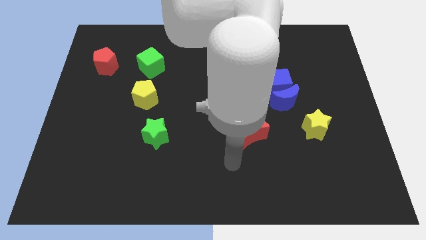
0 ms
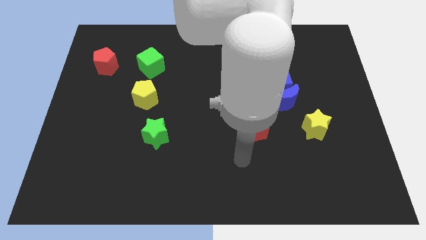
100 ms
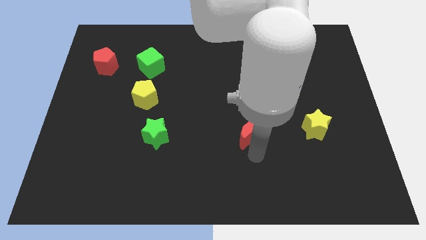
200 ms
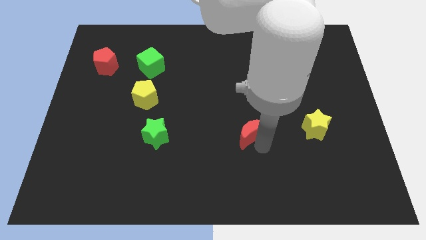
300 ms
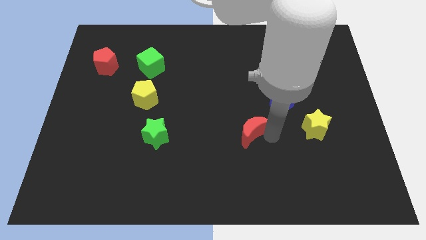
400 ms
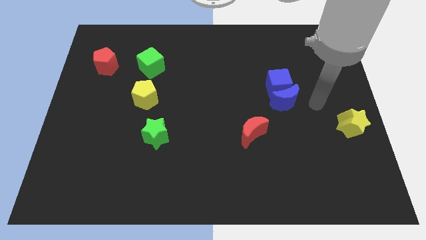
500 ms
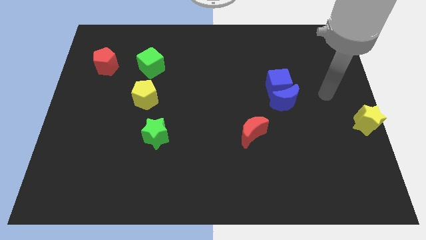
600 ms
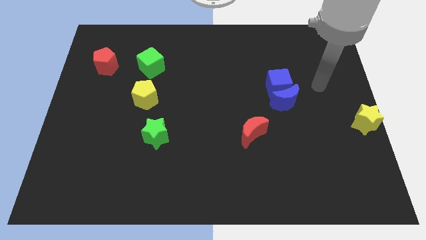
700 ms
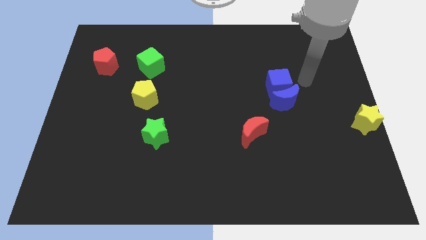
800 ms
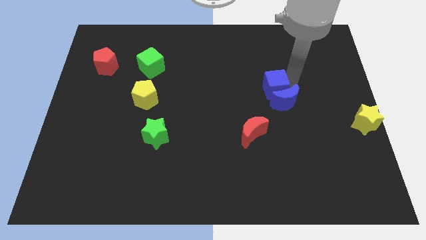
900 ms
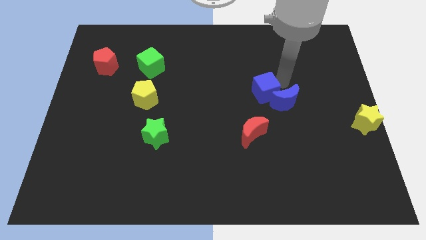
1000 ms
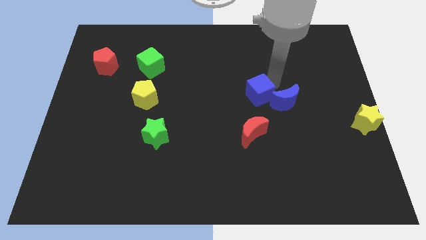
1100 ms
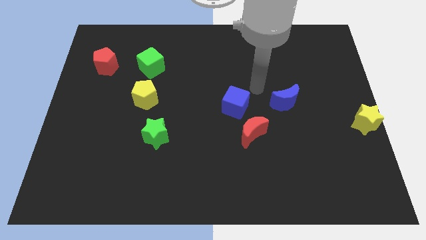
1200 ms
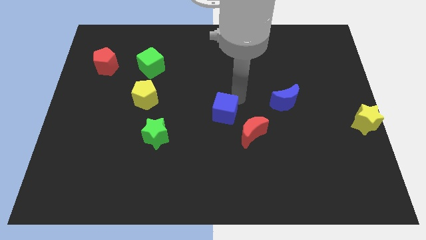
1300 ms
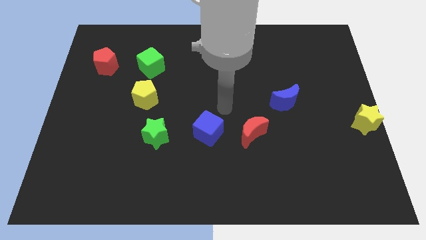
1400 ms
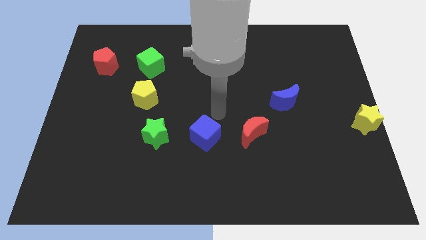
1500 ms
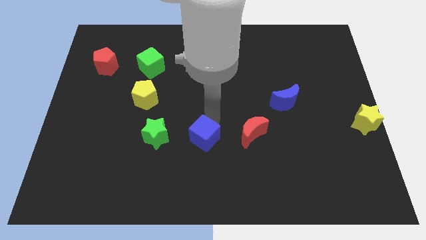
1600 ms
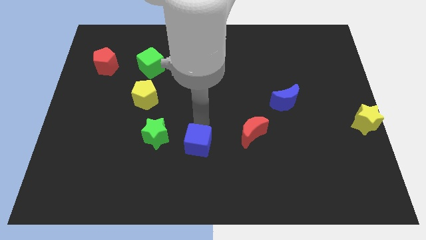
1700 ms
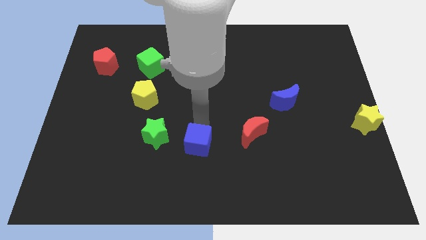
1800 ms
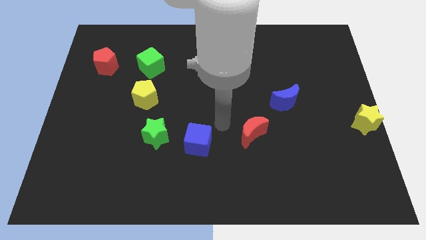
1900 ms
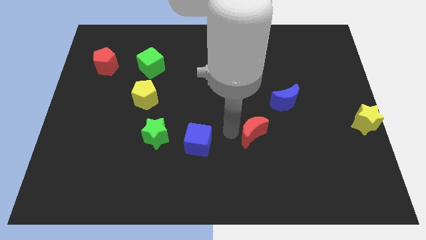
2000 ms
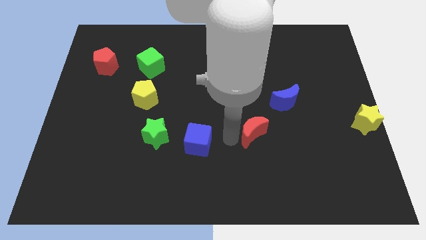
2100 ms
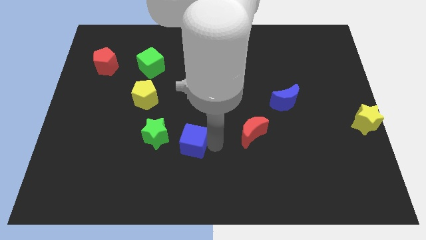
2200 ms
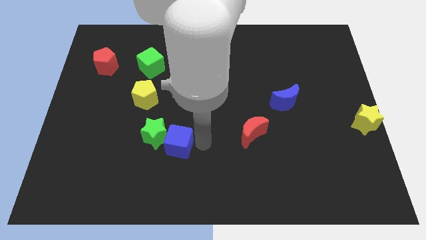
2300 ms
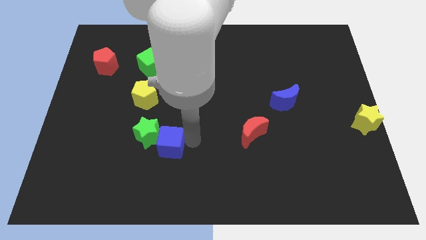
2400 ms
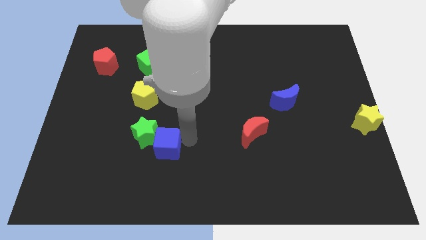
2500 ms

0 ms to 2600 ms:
put the blue cube towards the green star

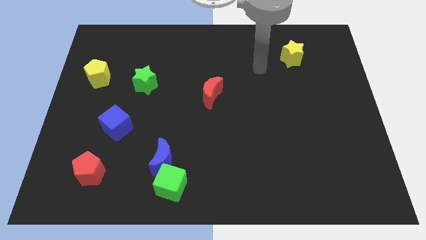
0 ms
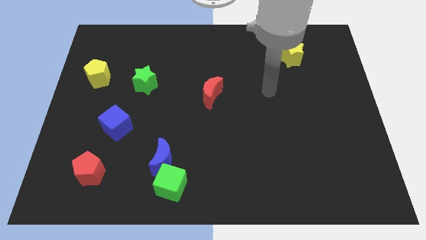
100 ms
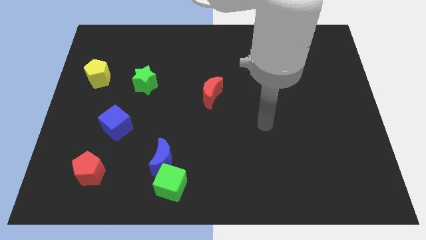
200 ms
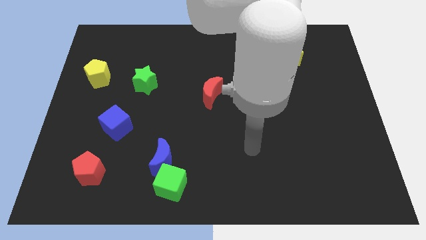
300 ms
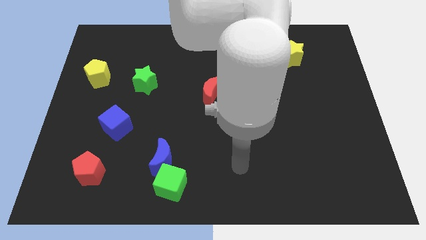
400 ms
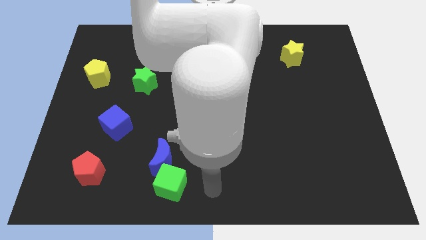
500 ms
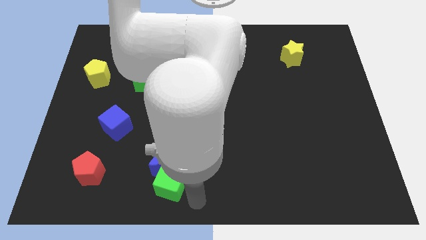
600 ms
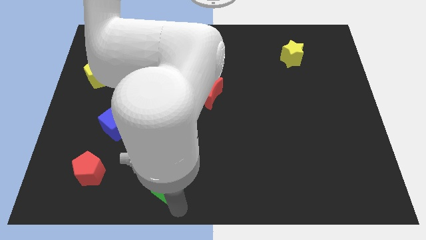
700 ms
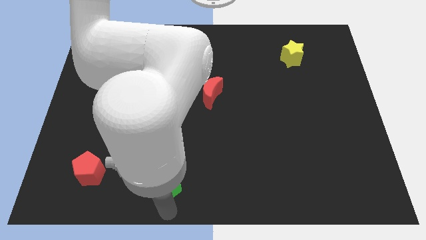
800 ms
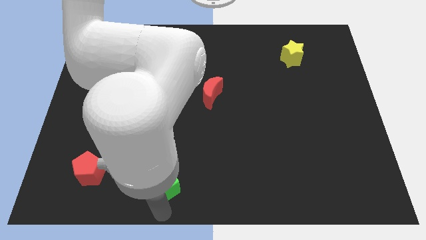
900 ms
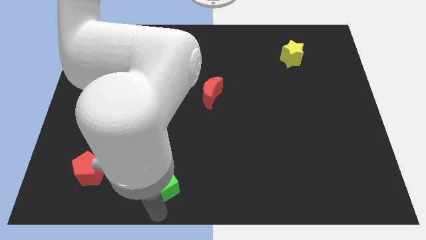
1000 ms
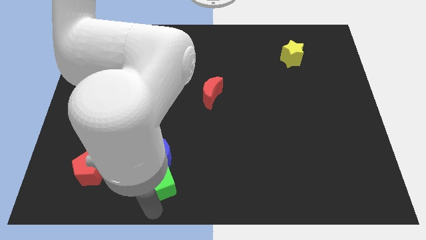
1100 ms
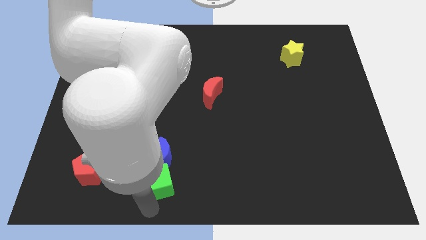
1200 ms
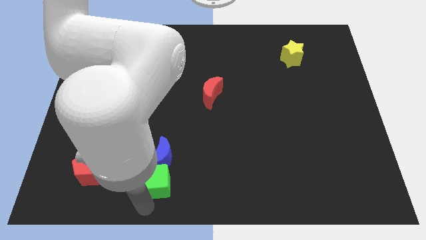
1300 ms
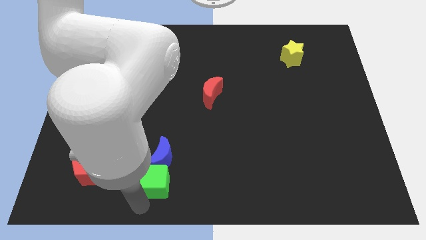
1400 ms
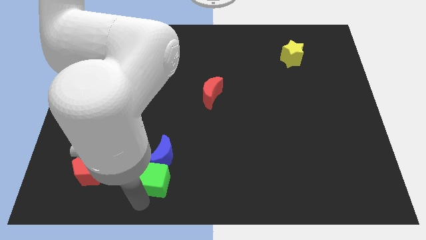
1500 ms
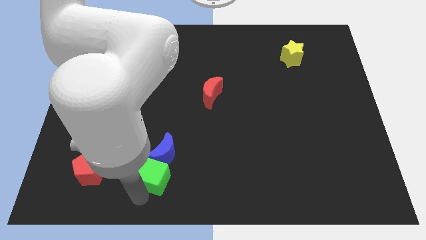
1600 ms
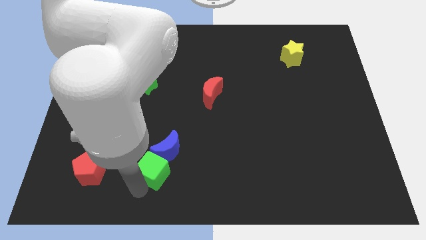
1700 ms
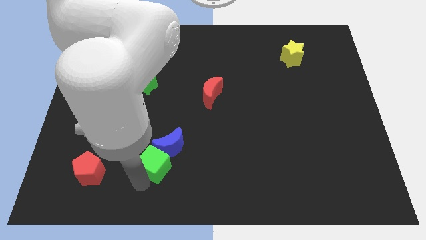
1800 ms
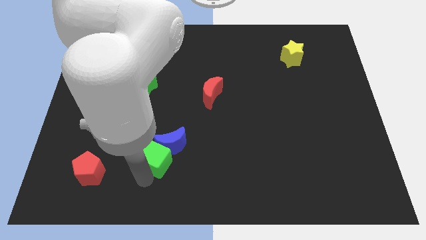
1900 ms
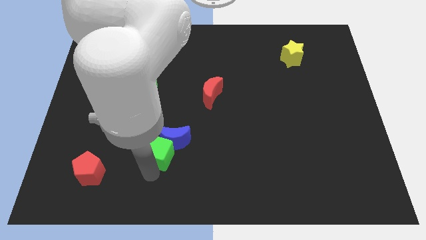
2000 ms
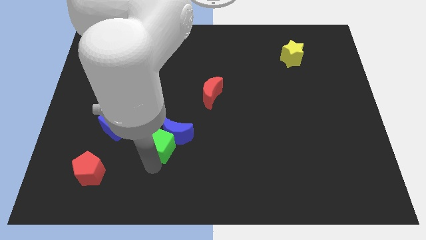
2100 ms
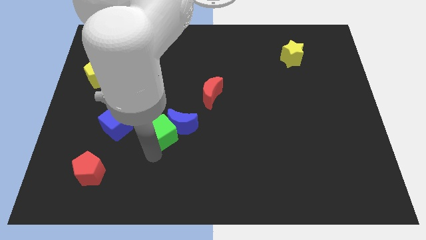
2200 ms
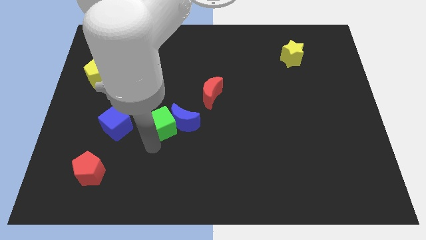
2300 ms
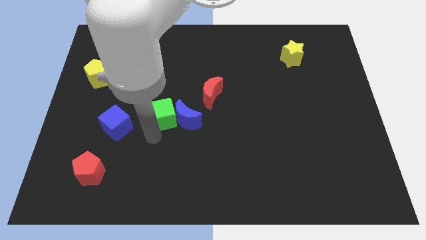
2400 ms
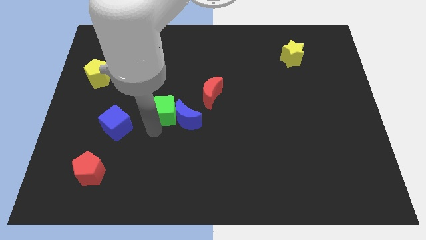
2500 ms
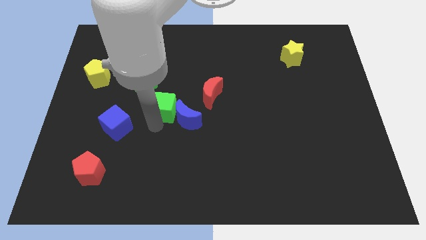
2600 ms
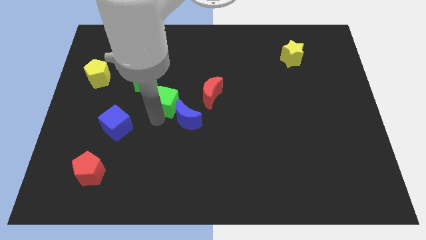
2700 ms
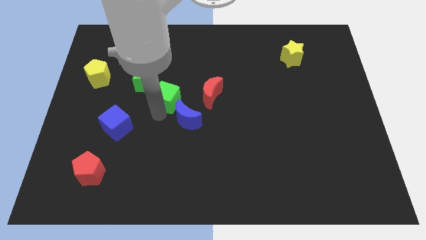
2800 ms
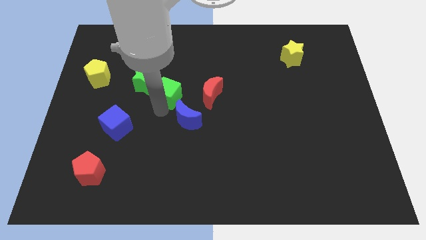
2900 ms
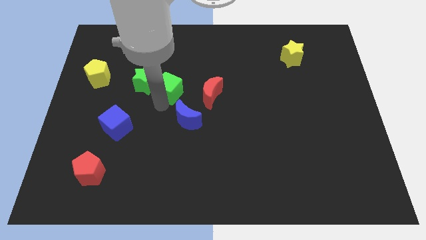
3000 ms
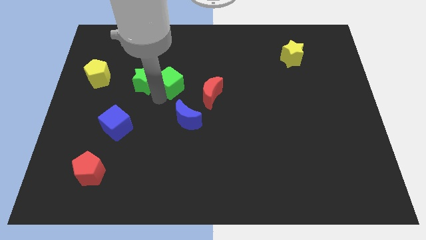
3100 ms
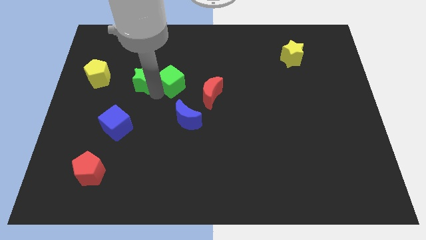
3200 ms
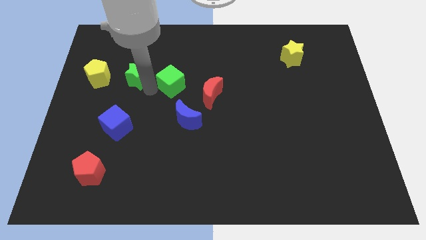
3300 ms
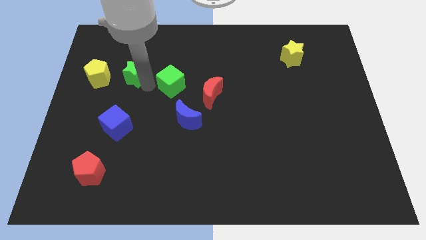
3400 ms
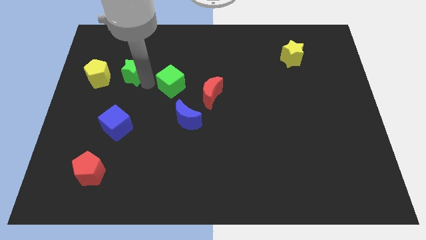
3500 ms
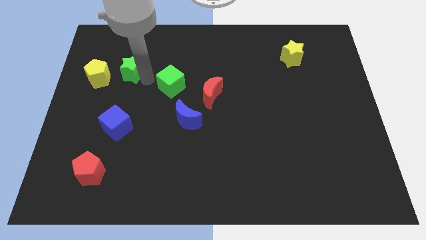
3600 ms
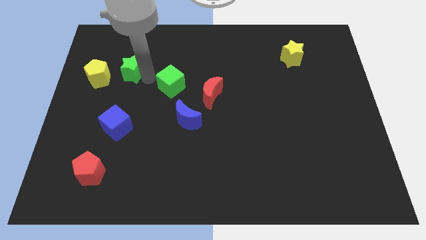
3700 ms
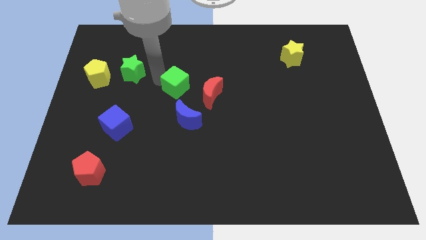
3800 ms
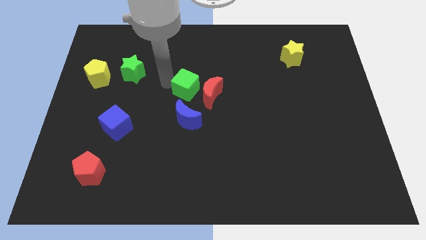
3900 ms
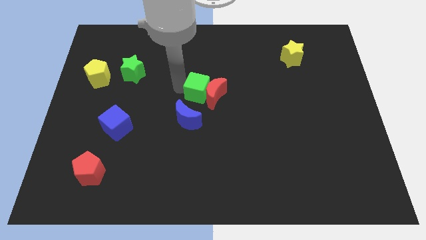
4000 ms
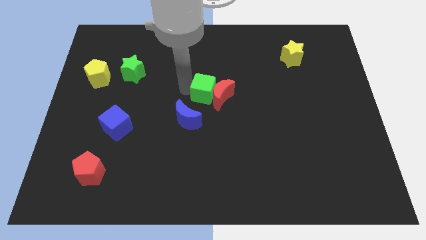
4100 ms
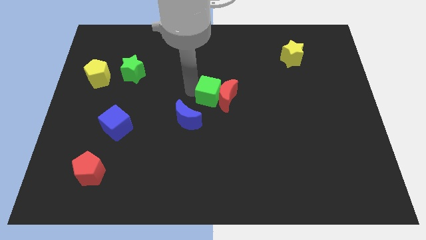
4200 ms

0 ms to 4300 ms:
slide the green cube towards the red moon

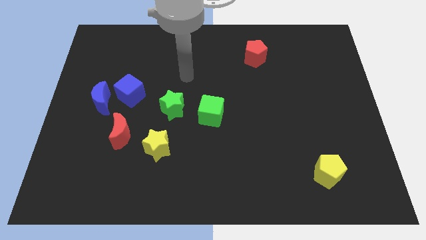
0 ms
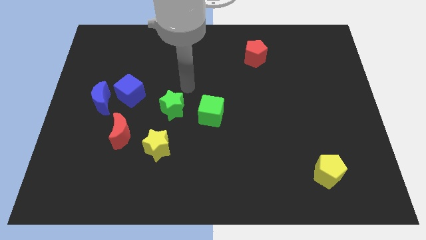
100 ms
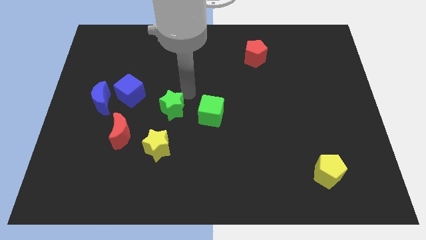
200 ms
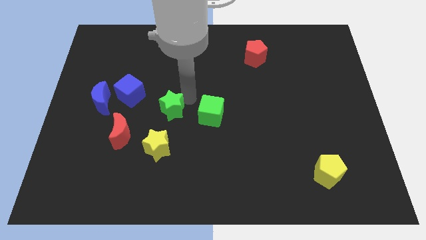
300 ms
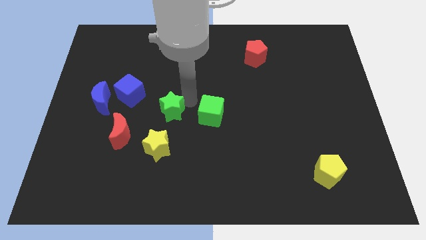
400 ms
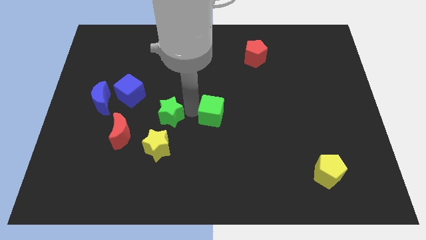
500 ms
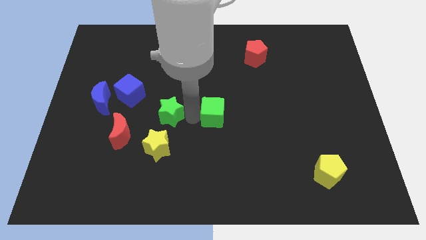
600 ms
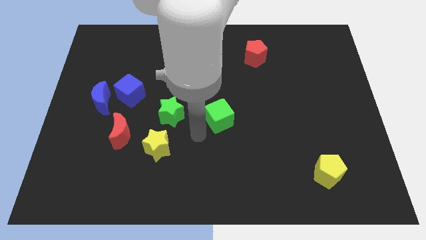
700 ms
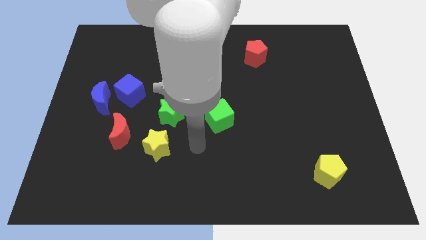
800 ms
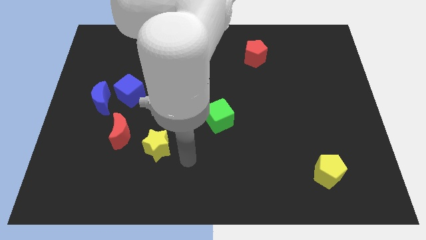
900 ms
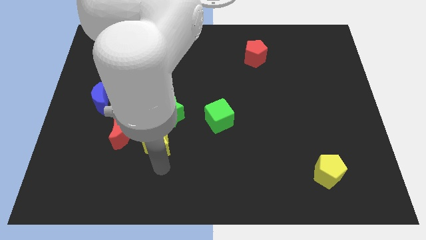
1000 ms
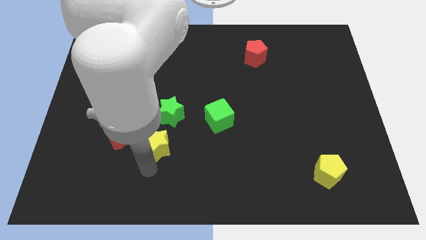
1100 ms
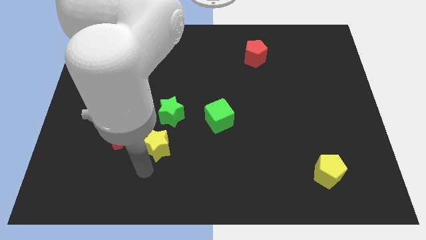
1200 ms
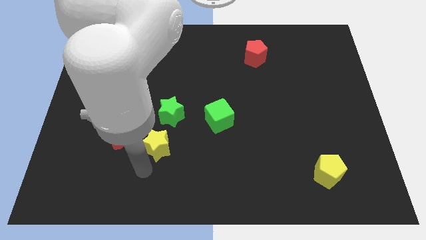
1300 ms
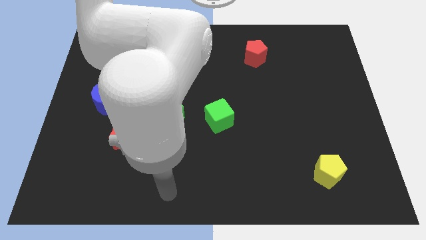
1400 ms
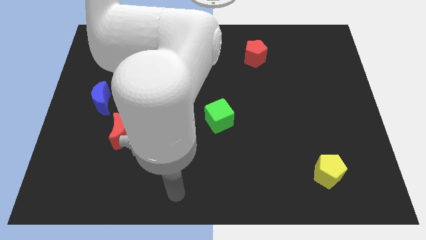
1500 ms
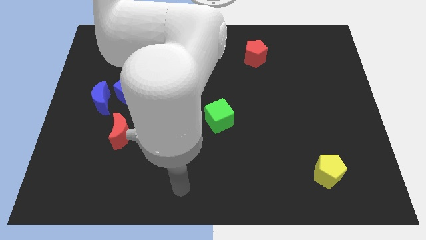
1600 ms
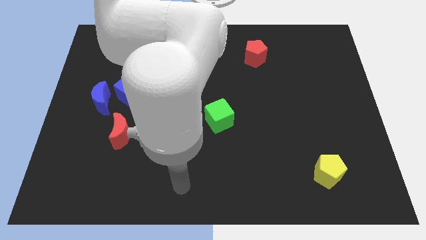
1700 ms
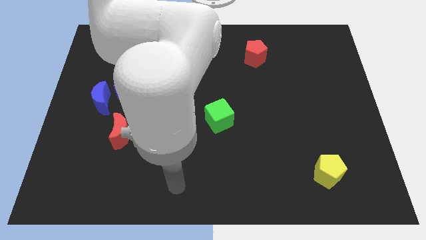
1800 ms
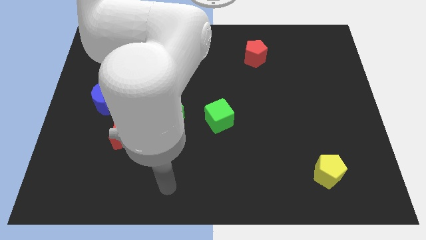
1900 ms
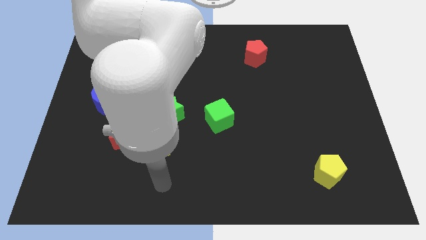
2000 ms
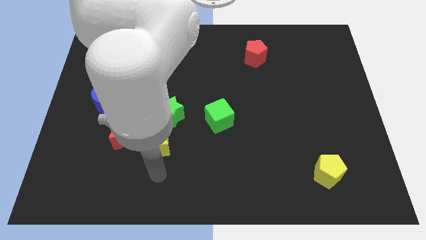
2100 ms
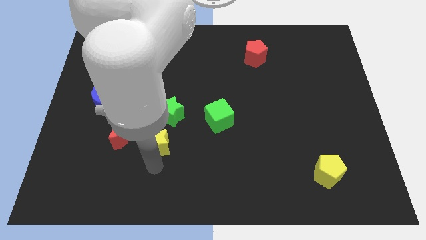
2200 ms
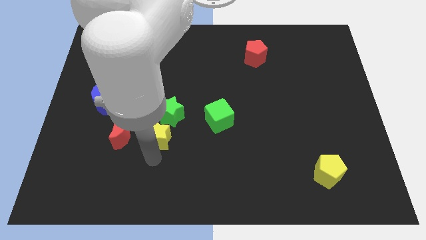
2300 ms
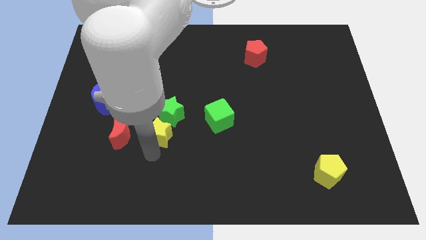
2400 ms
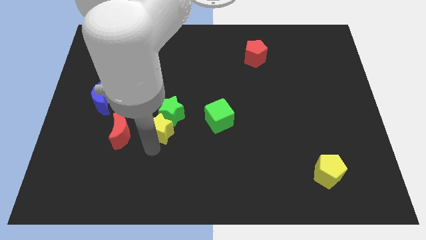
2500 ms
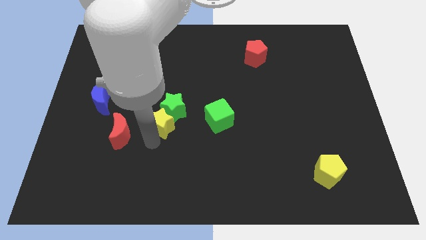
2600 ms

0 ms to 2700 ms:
move the yellow star towards the green star
